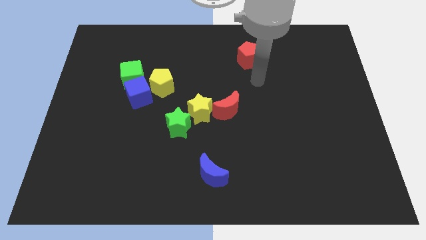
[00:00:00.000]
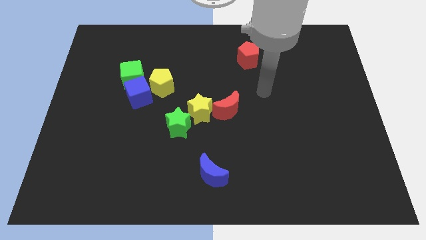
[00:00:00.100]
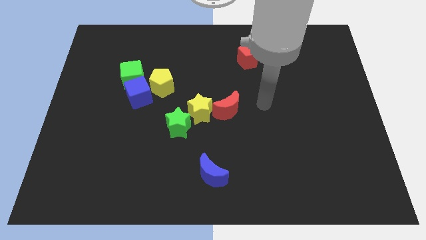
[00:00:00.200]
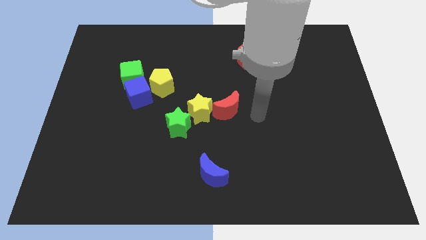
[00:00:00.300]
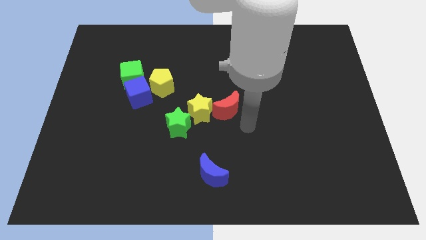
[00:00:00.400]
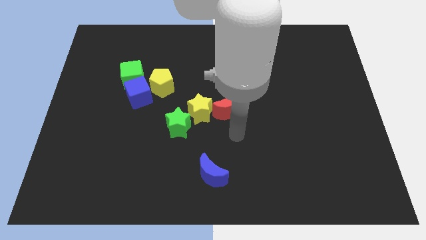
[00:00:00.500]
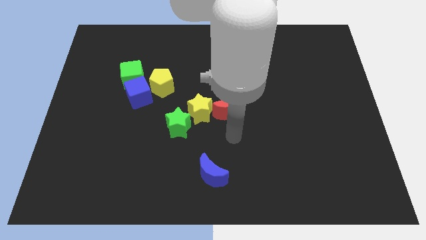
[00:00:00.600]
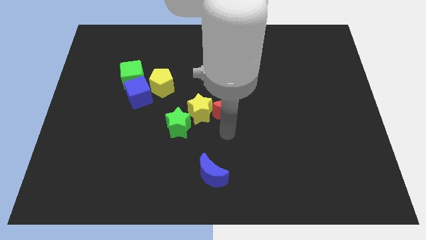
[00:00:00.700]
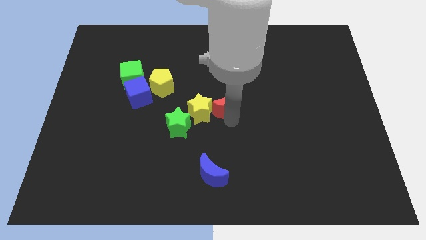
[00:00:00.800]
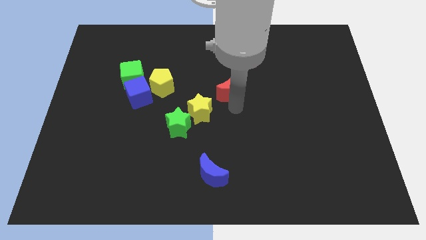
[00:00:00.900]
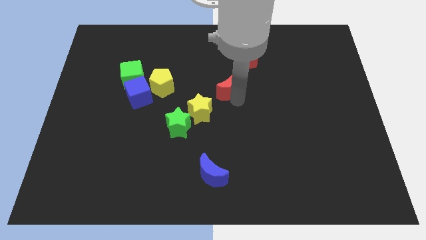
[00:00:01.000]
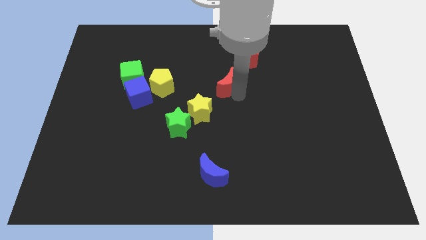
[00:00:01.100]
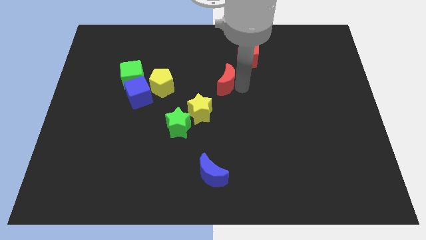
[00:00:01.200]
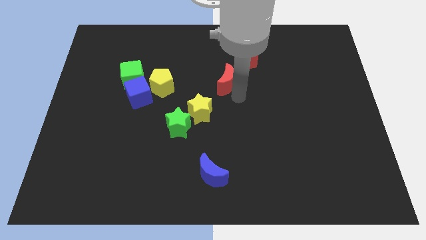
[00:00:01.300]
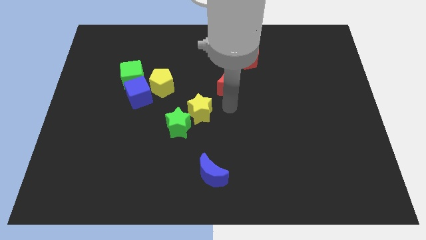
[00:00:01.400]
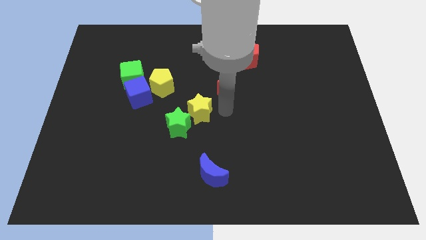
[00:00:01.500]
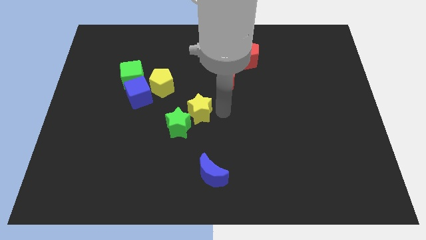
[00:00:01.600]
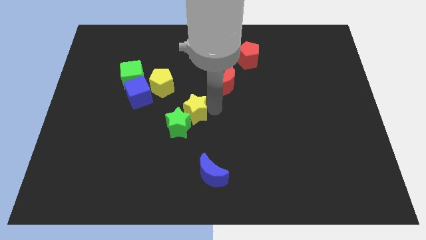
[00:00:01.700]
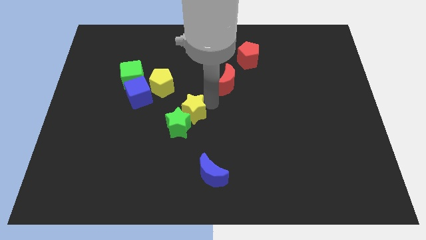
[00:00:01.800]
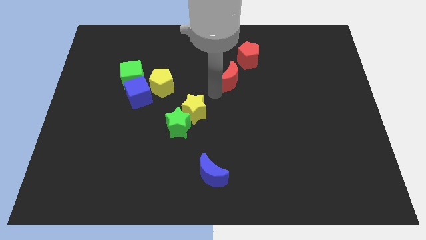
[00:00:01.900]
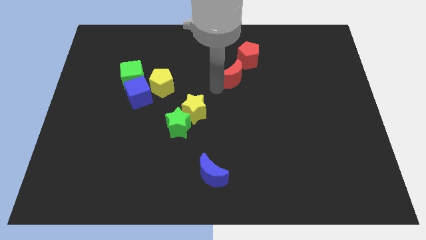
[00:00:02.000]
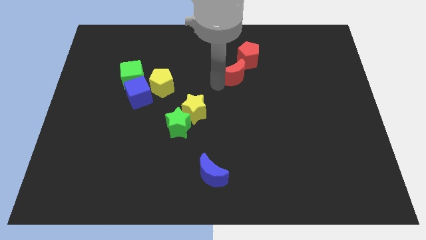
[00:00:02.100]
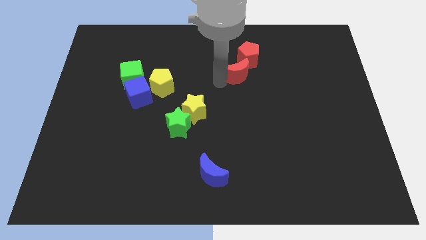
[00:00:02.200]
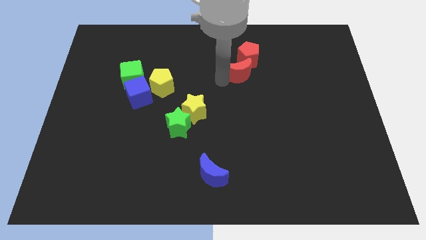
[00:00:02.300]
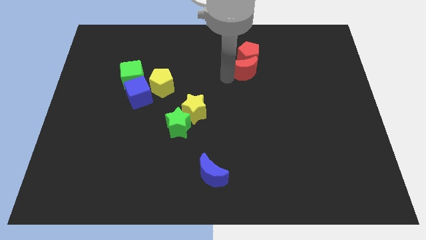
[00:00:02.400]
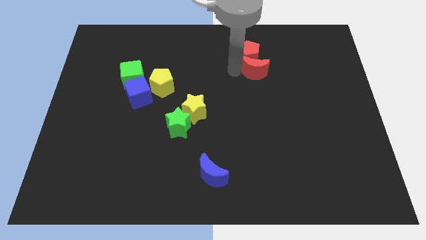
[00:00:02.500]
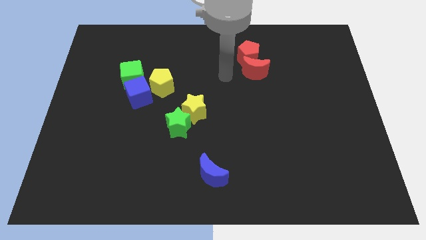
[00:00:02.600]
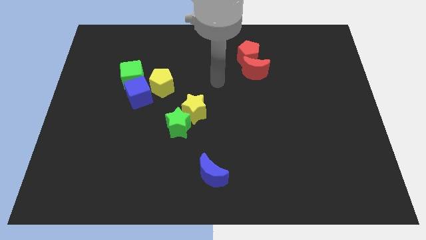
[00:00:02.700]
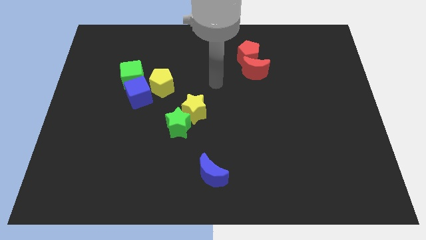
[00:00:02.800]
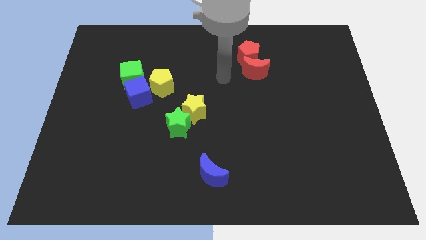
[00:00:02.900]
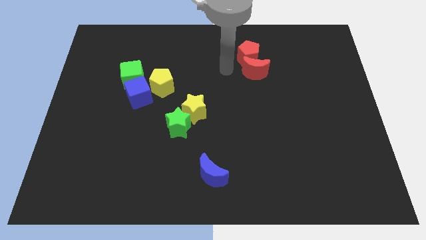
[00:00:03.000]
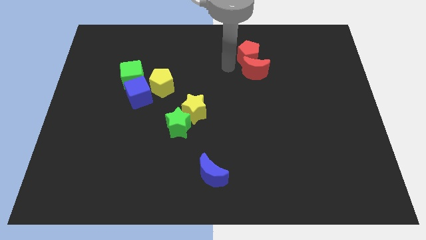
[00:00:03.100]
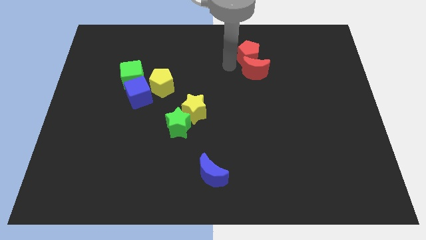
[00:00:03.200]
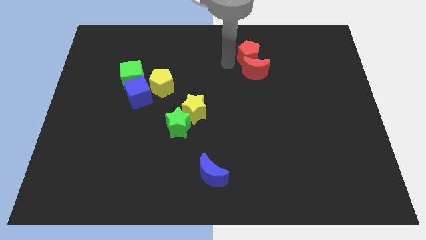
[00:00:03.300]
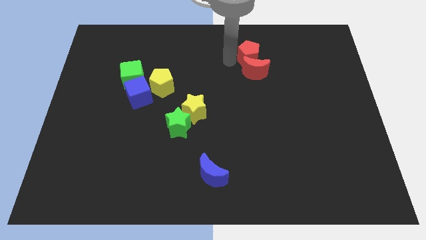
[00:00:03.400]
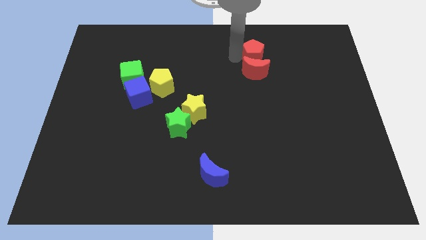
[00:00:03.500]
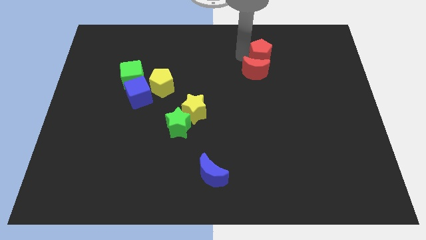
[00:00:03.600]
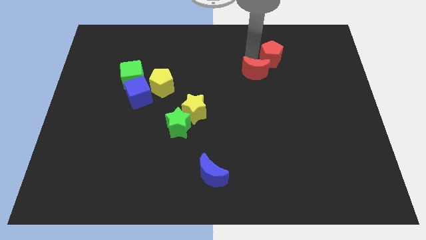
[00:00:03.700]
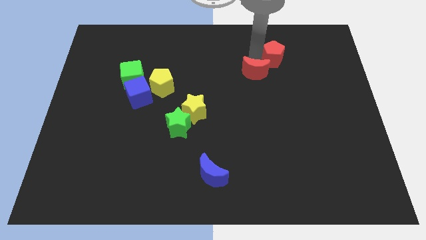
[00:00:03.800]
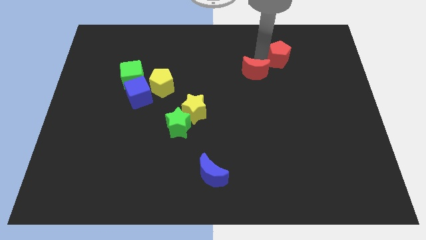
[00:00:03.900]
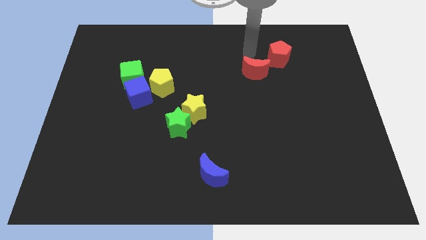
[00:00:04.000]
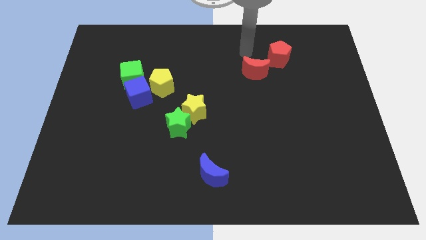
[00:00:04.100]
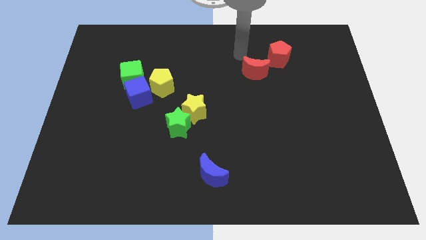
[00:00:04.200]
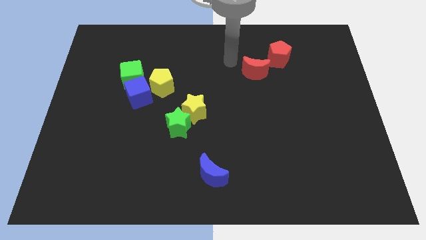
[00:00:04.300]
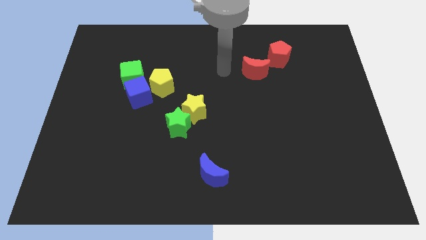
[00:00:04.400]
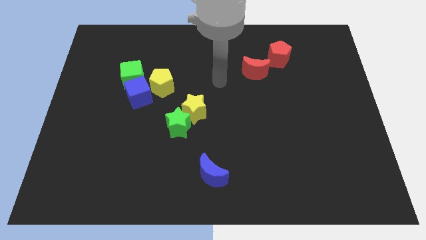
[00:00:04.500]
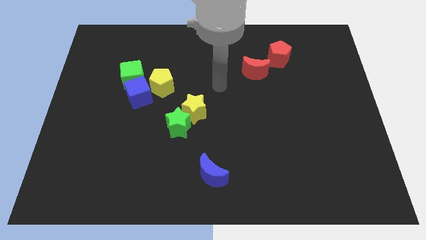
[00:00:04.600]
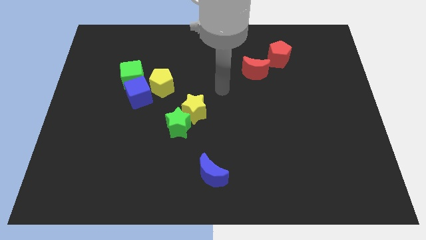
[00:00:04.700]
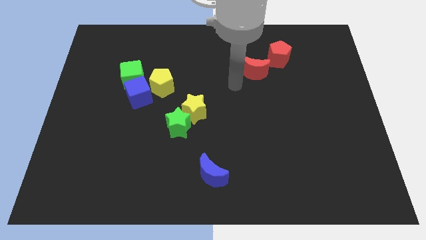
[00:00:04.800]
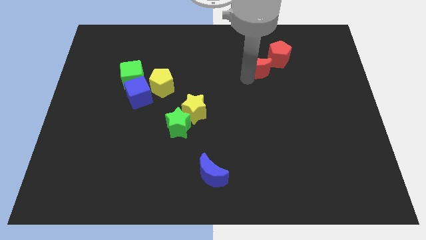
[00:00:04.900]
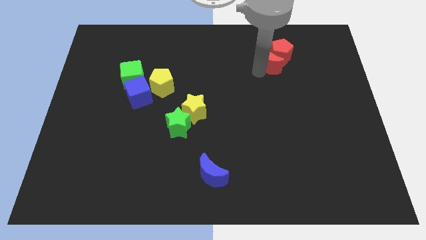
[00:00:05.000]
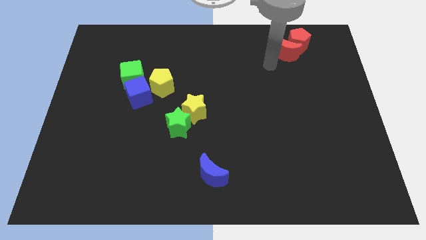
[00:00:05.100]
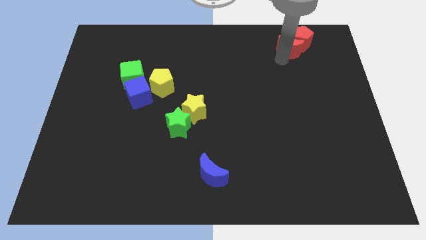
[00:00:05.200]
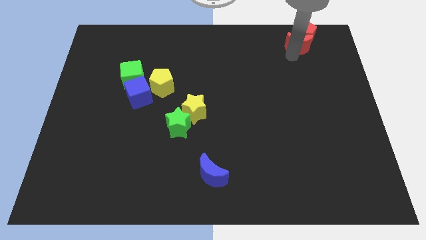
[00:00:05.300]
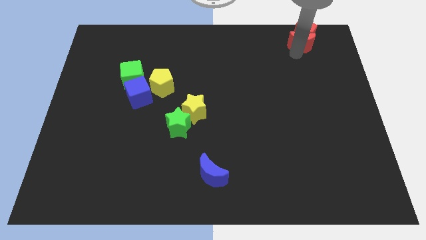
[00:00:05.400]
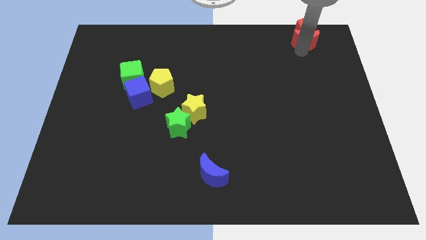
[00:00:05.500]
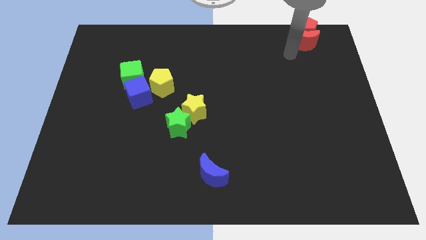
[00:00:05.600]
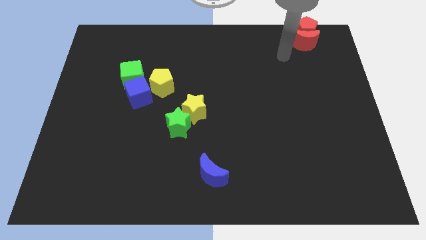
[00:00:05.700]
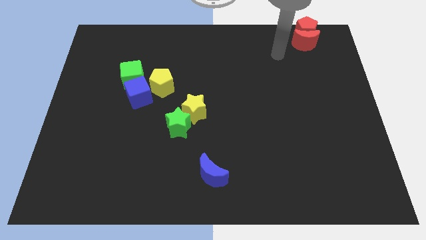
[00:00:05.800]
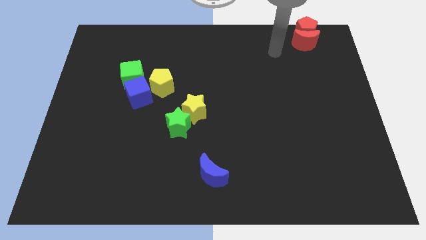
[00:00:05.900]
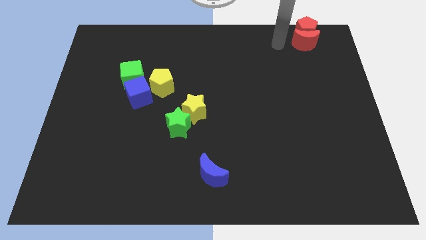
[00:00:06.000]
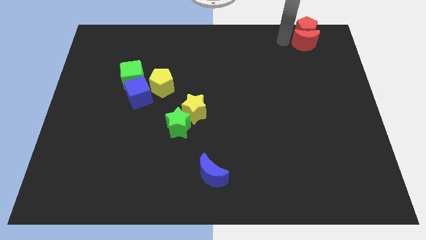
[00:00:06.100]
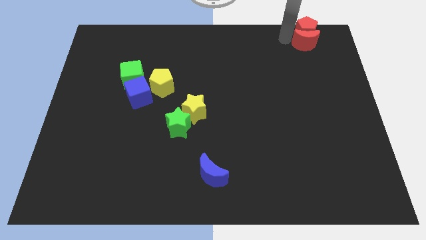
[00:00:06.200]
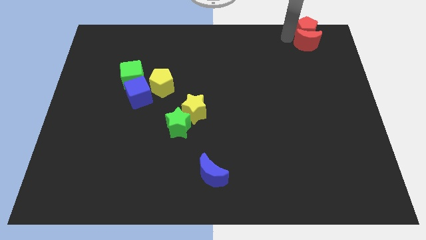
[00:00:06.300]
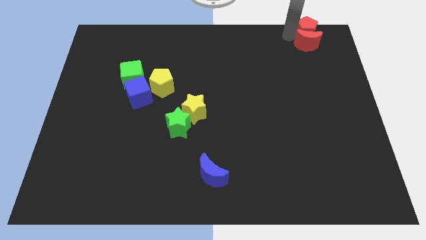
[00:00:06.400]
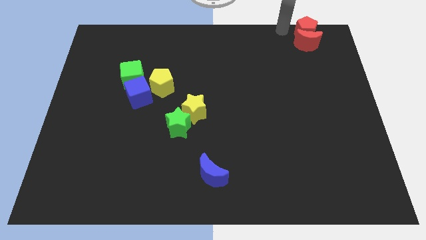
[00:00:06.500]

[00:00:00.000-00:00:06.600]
push the red moon into the red pentagon

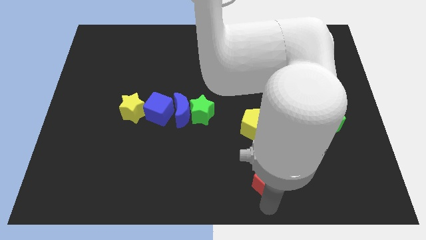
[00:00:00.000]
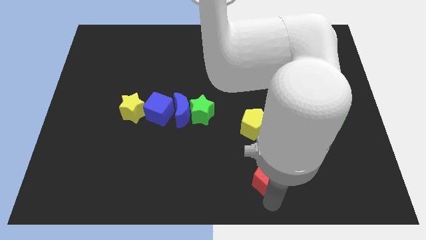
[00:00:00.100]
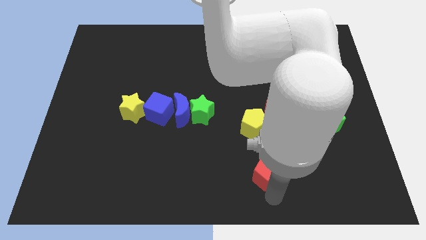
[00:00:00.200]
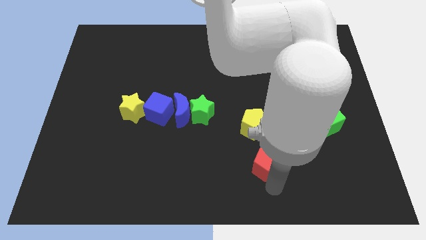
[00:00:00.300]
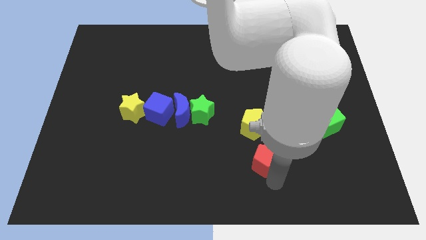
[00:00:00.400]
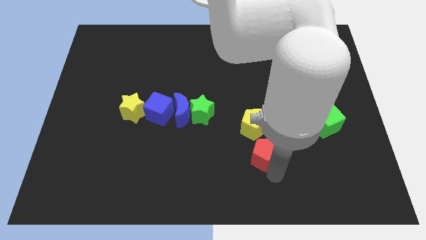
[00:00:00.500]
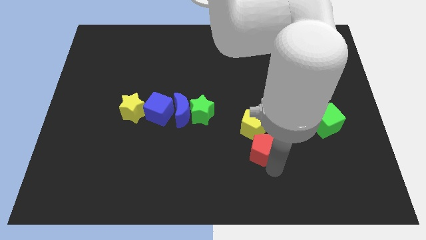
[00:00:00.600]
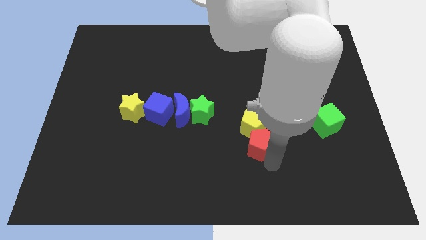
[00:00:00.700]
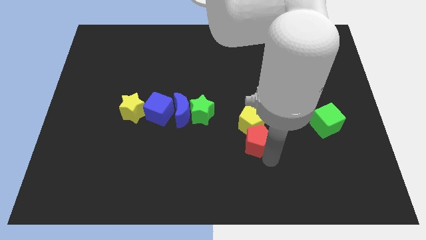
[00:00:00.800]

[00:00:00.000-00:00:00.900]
drag the red pentagon close to the yellow pentagon

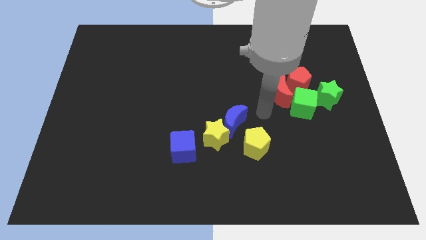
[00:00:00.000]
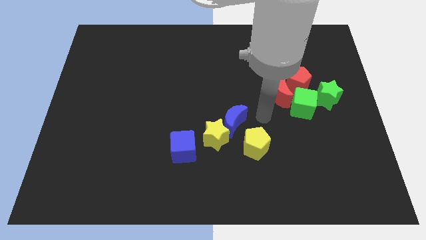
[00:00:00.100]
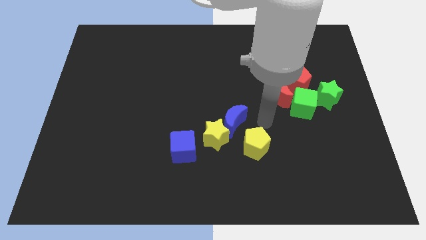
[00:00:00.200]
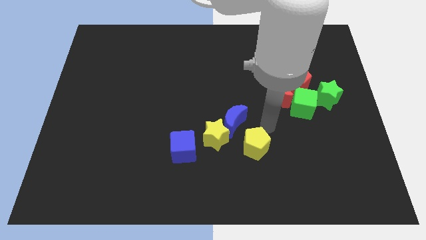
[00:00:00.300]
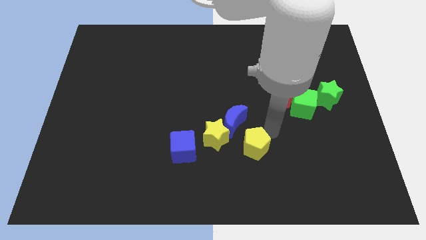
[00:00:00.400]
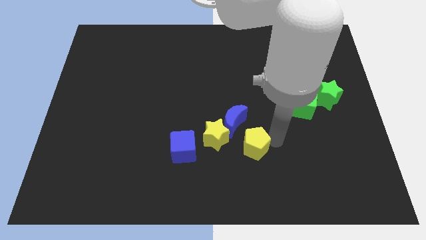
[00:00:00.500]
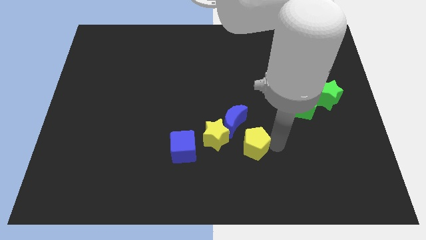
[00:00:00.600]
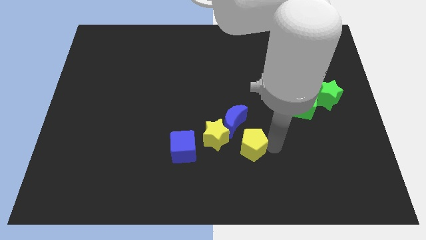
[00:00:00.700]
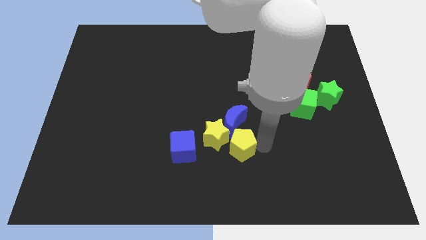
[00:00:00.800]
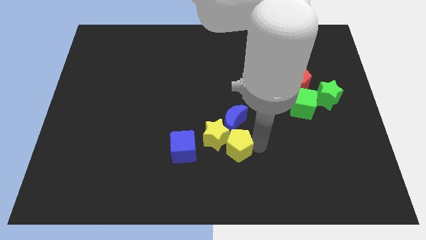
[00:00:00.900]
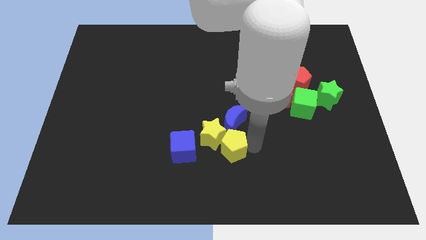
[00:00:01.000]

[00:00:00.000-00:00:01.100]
push the yellow pentagon close to the yellow star

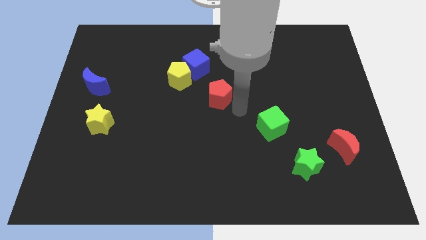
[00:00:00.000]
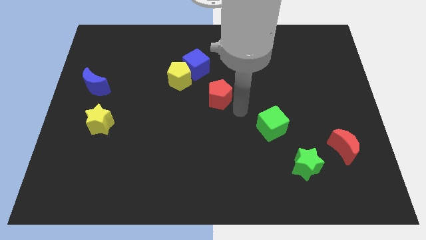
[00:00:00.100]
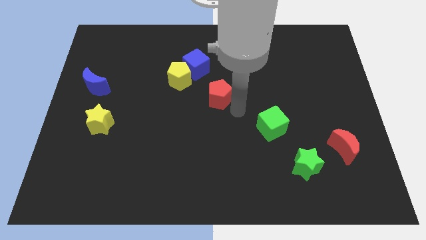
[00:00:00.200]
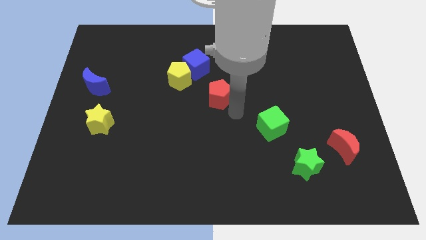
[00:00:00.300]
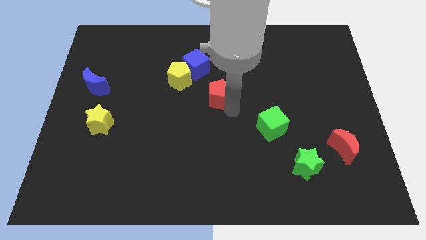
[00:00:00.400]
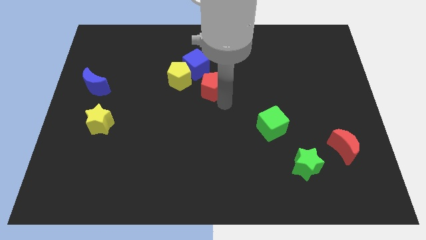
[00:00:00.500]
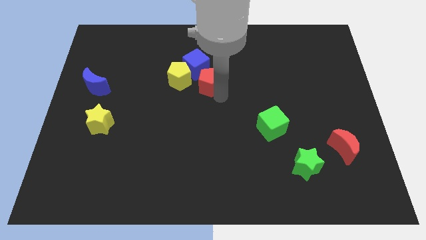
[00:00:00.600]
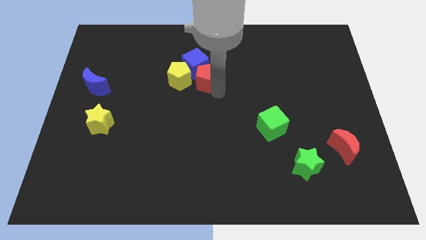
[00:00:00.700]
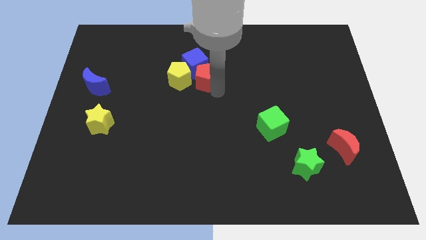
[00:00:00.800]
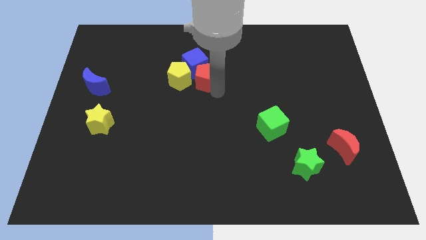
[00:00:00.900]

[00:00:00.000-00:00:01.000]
push the red pentagon towards the blue cube
